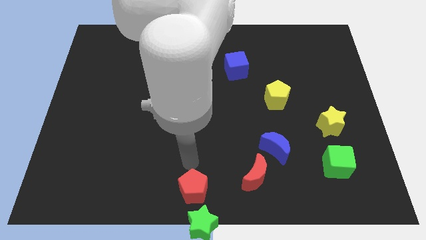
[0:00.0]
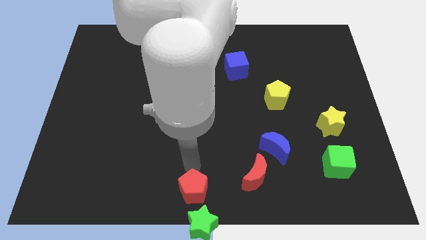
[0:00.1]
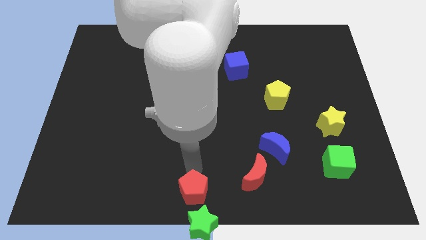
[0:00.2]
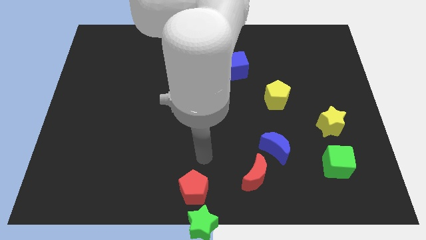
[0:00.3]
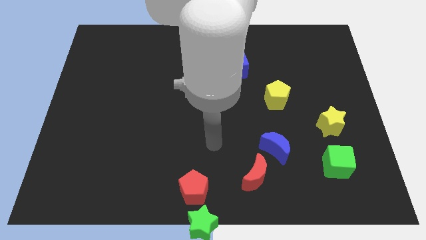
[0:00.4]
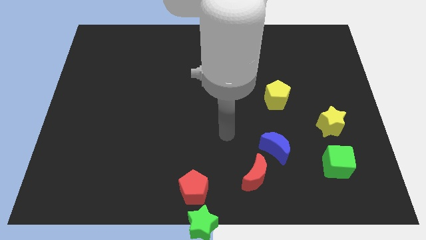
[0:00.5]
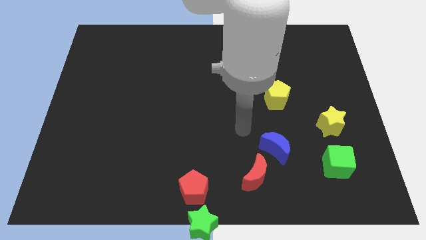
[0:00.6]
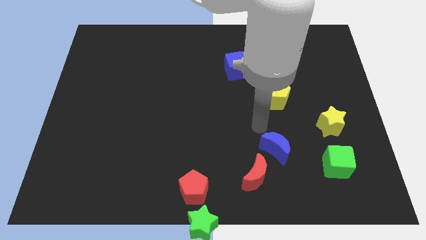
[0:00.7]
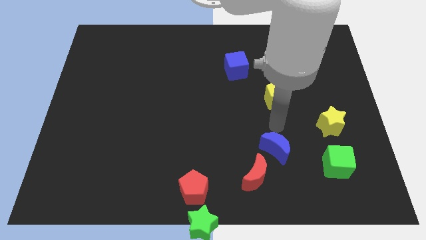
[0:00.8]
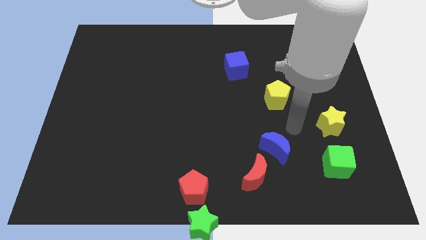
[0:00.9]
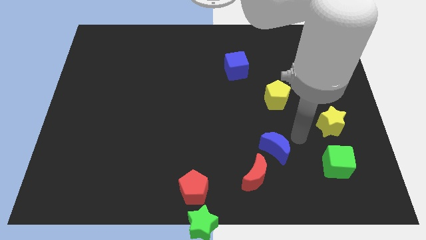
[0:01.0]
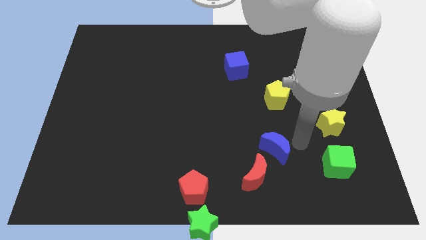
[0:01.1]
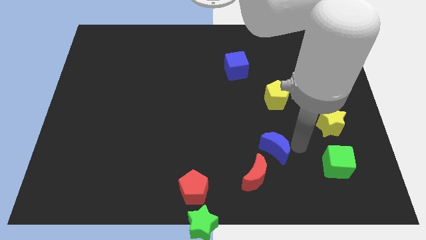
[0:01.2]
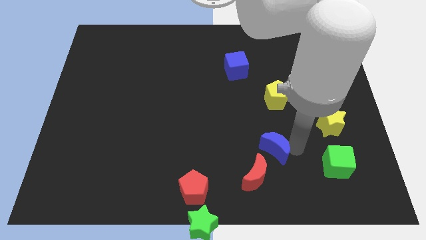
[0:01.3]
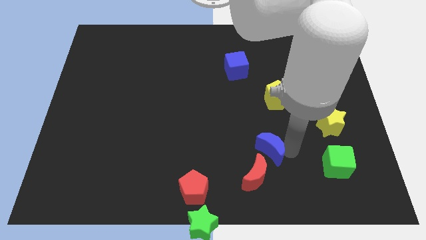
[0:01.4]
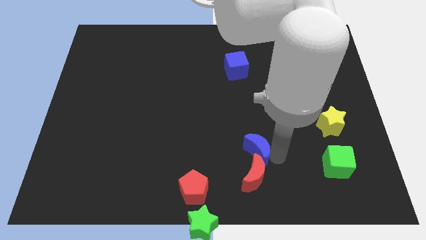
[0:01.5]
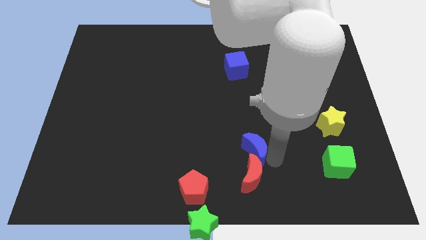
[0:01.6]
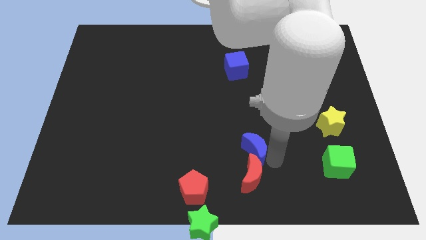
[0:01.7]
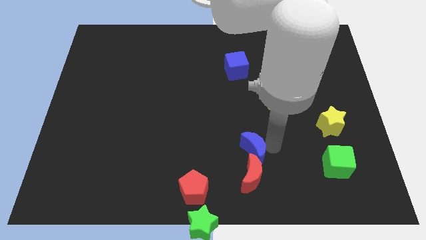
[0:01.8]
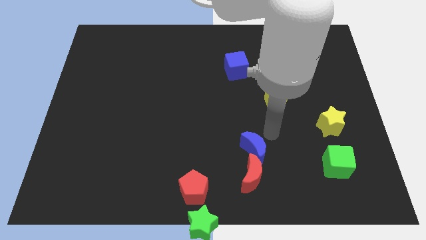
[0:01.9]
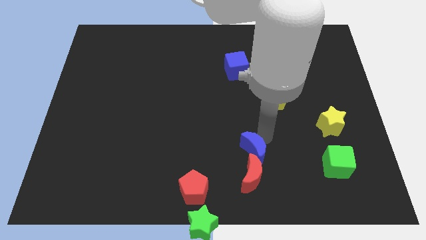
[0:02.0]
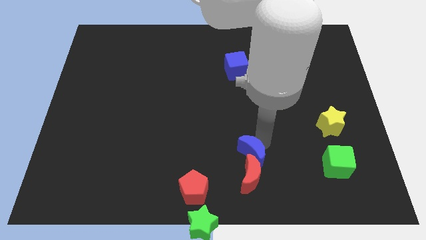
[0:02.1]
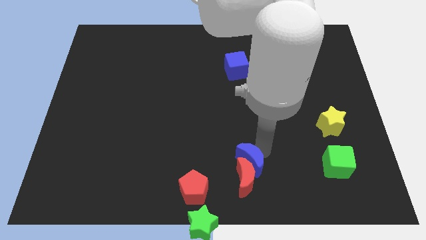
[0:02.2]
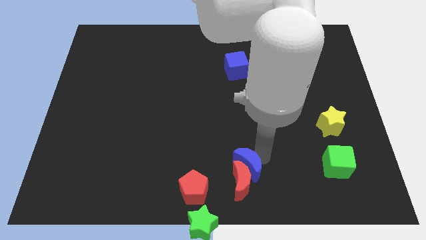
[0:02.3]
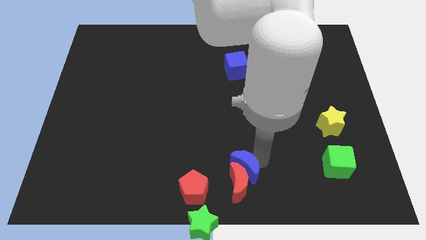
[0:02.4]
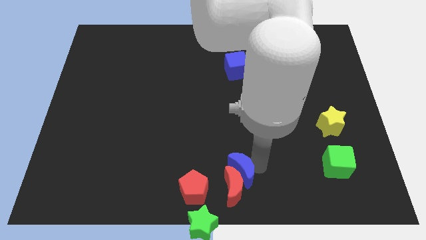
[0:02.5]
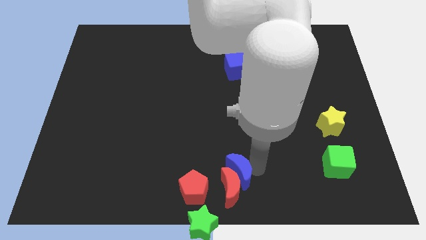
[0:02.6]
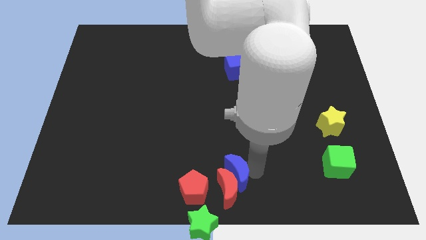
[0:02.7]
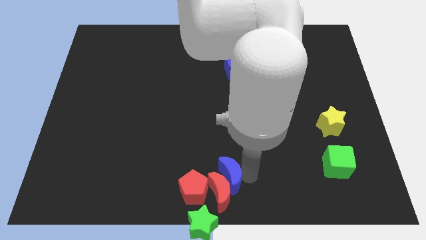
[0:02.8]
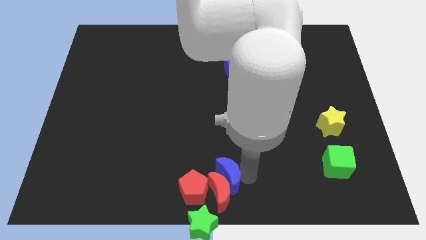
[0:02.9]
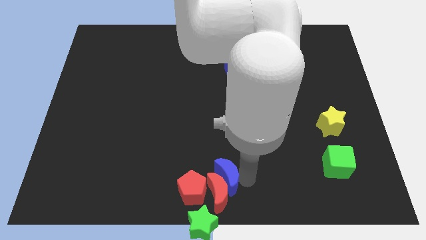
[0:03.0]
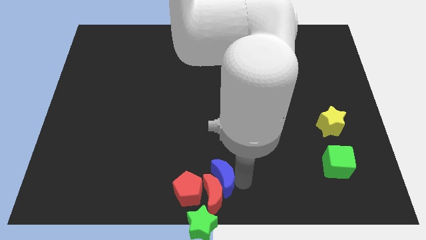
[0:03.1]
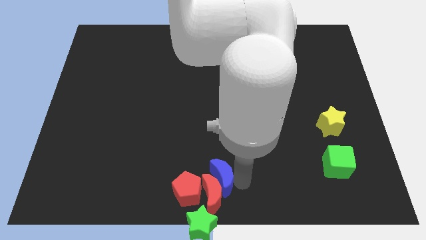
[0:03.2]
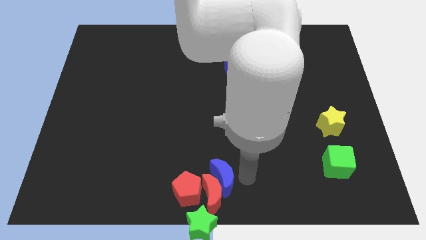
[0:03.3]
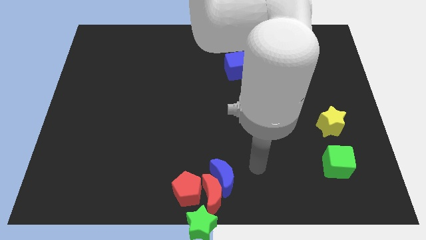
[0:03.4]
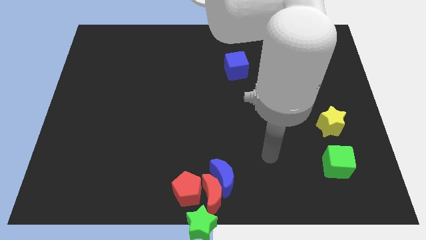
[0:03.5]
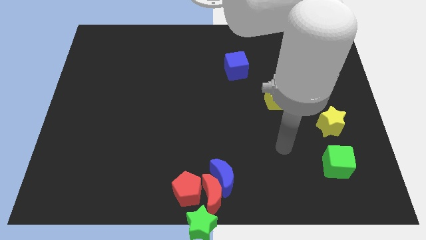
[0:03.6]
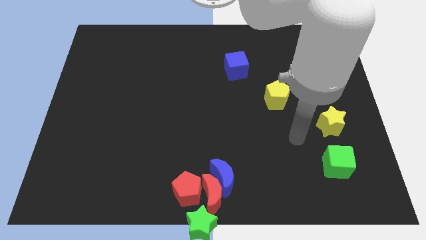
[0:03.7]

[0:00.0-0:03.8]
push the blue moon and the red moon into the red pentagon

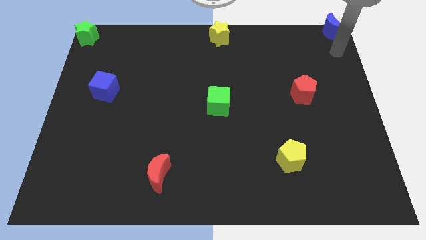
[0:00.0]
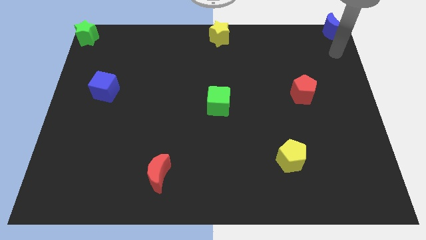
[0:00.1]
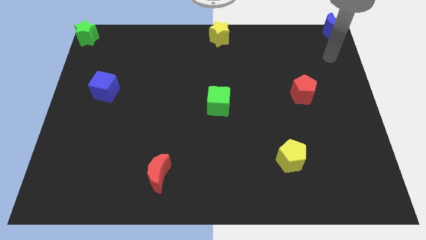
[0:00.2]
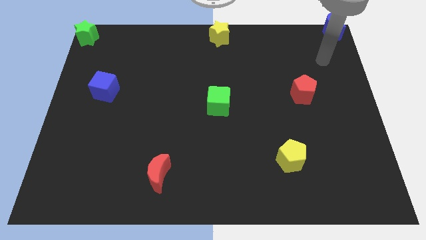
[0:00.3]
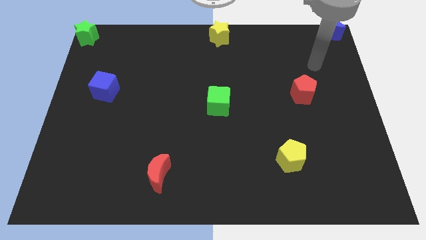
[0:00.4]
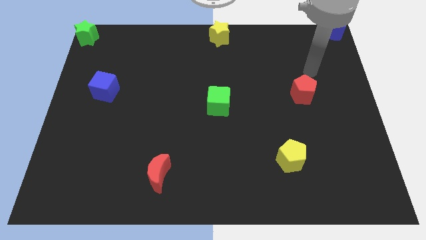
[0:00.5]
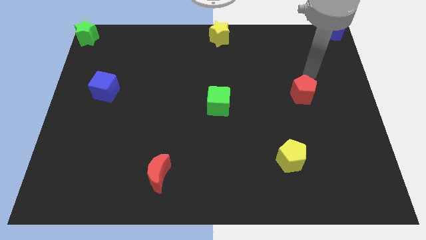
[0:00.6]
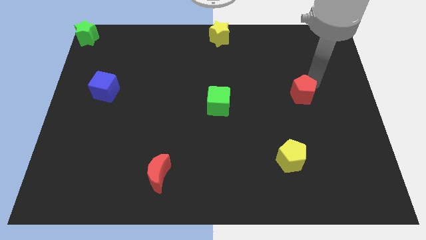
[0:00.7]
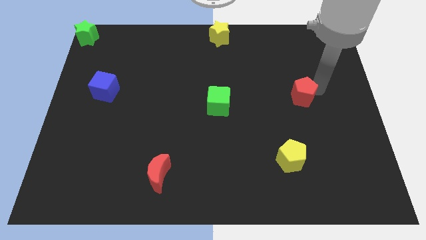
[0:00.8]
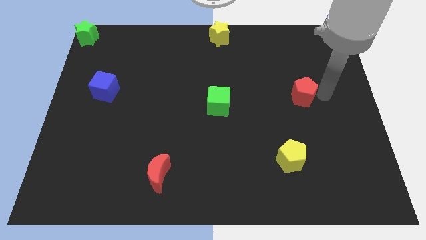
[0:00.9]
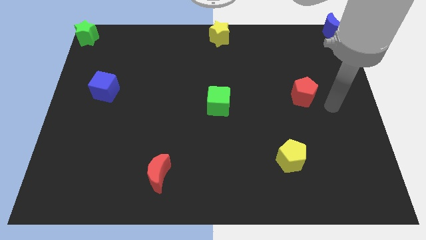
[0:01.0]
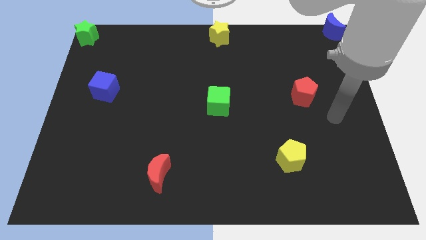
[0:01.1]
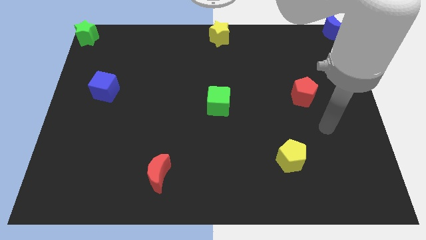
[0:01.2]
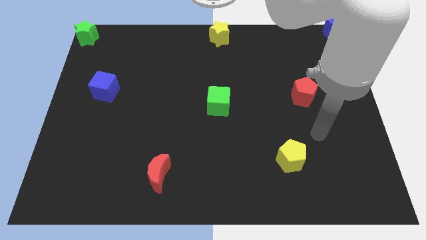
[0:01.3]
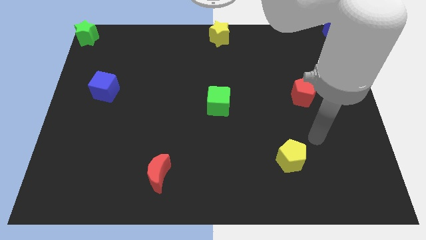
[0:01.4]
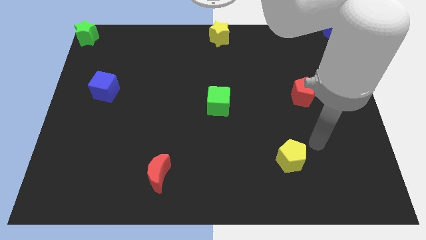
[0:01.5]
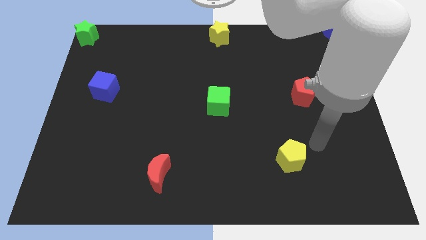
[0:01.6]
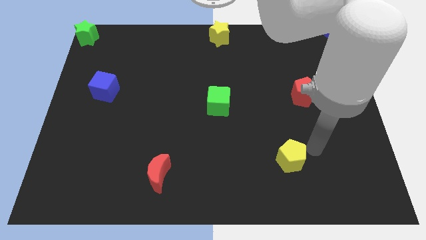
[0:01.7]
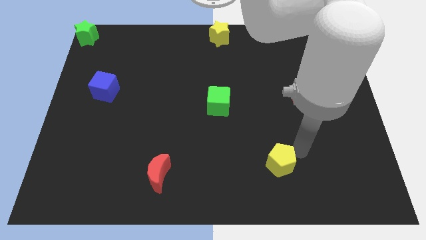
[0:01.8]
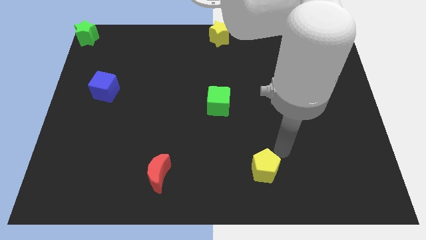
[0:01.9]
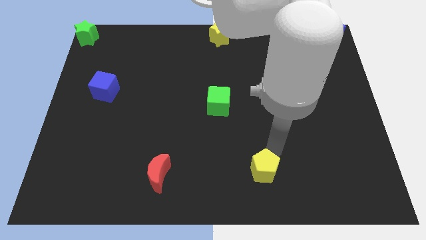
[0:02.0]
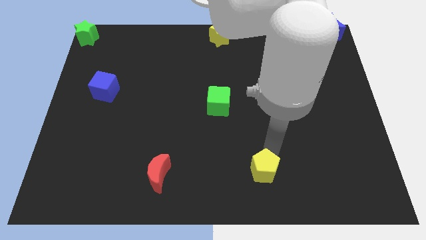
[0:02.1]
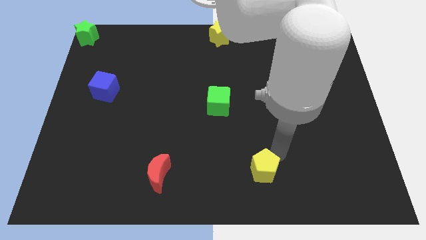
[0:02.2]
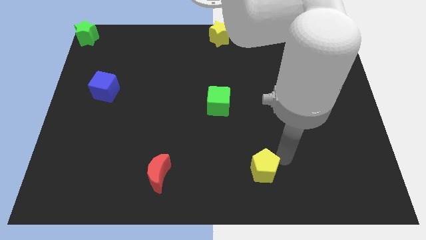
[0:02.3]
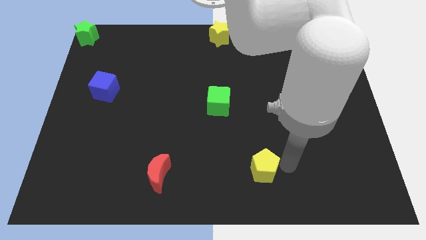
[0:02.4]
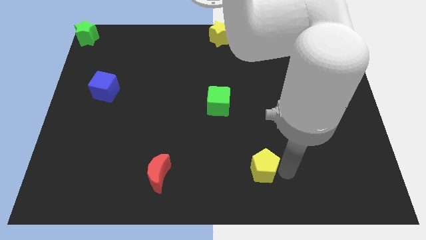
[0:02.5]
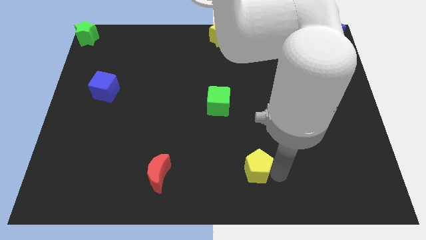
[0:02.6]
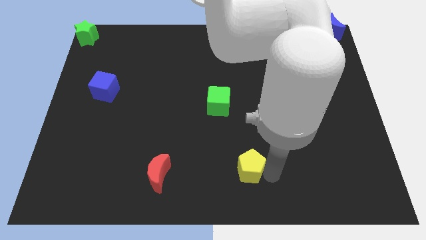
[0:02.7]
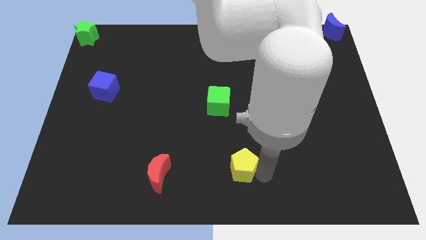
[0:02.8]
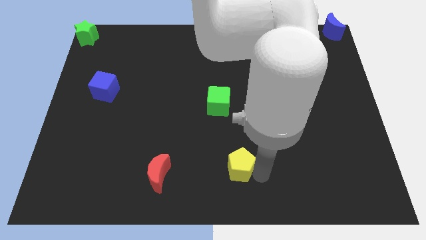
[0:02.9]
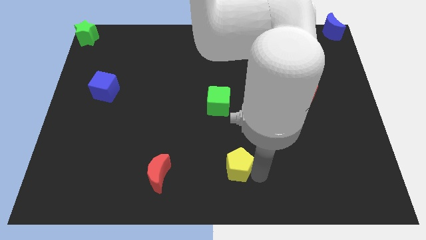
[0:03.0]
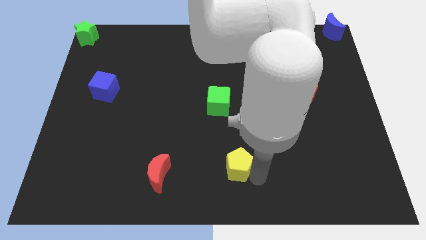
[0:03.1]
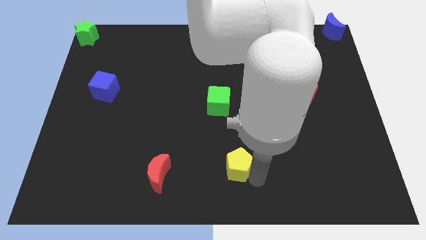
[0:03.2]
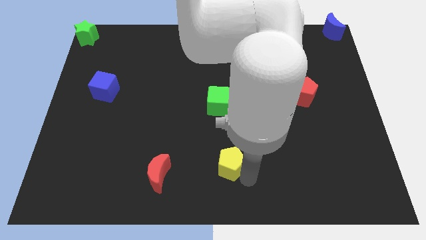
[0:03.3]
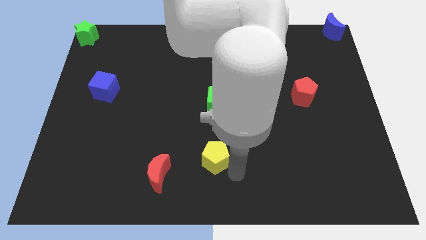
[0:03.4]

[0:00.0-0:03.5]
move the yellow pentagon below the green cube

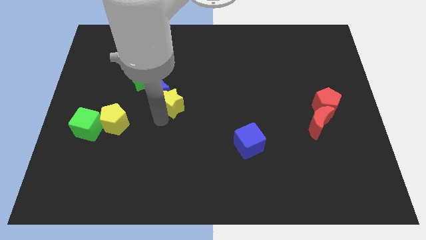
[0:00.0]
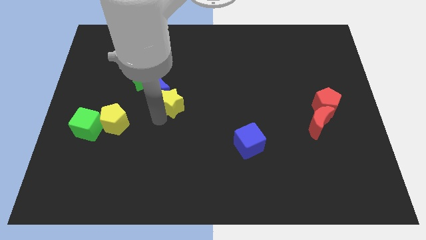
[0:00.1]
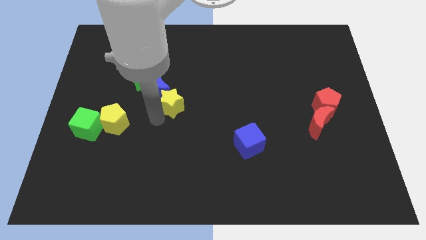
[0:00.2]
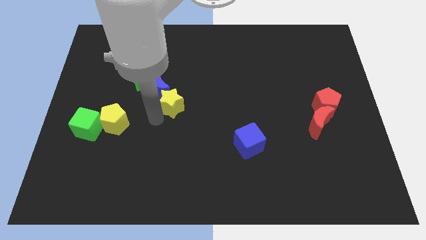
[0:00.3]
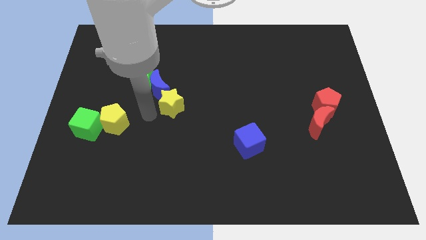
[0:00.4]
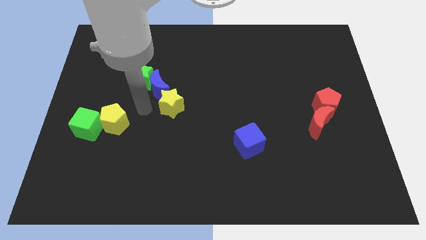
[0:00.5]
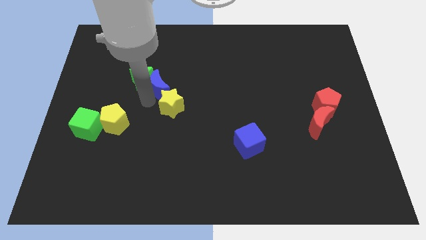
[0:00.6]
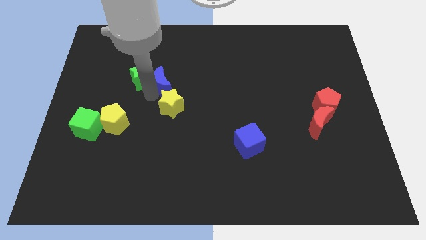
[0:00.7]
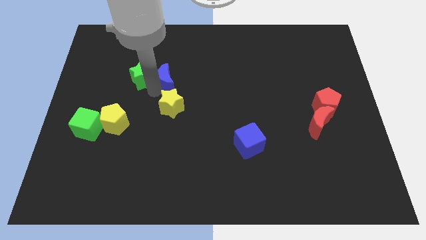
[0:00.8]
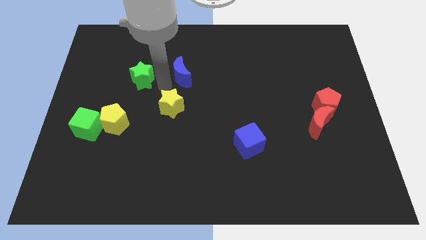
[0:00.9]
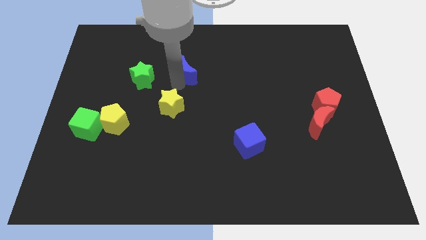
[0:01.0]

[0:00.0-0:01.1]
push blue moon on top right of yellow star

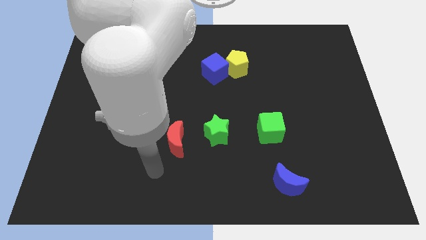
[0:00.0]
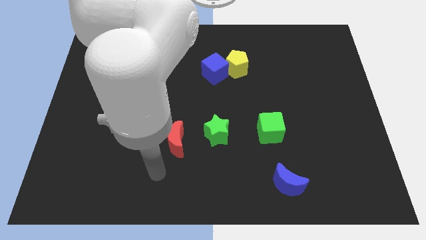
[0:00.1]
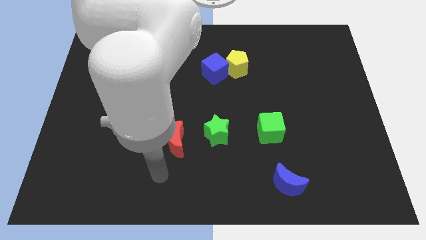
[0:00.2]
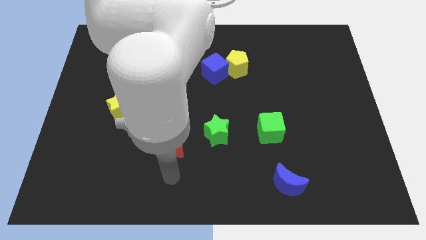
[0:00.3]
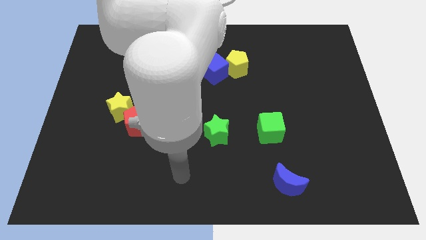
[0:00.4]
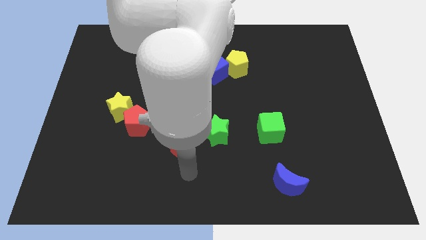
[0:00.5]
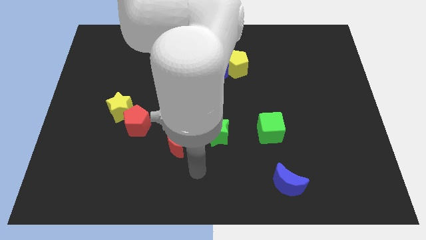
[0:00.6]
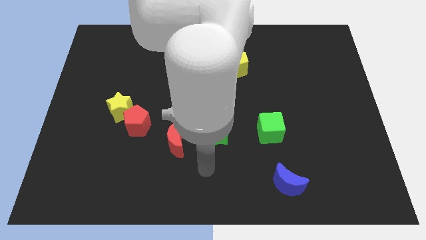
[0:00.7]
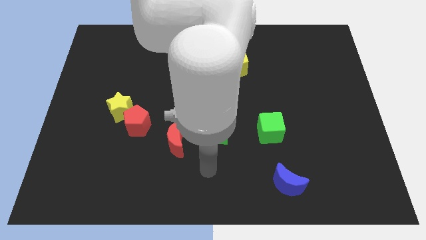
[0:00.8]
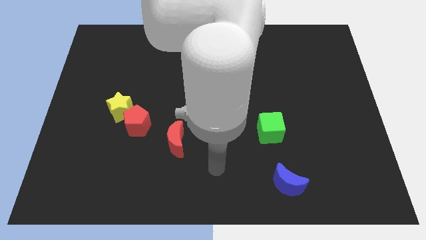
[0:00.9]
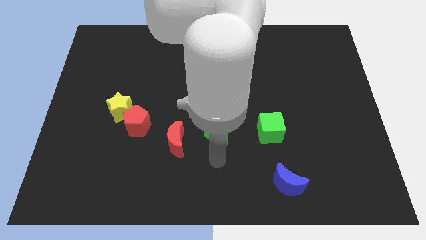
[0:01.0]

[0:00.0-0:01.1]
slide your hand below the green star
